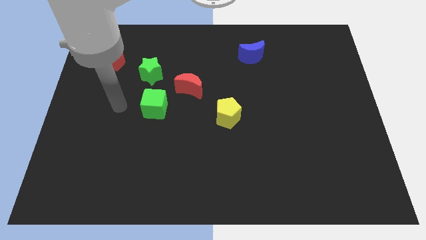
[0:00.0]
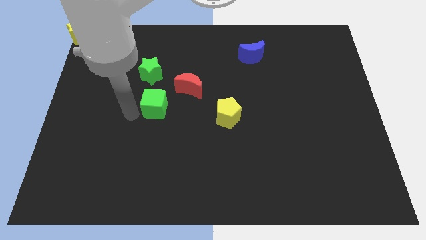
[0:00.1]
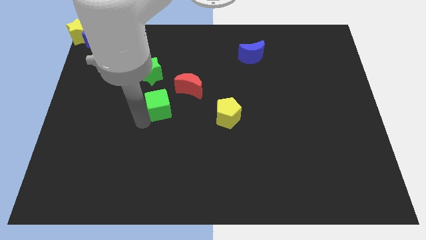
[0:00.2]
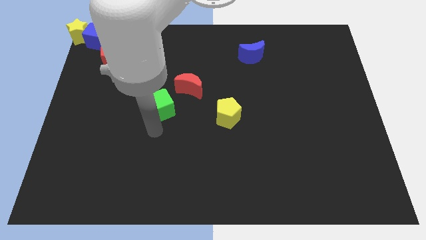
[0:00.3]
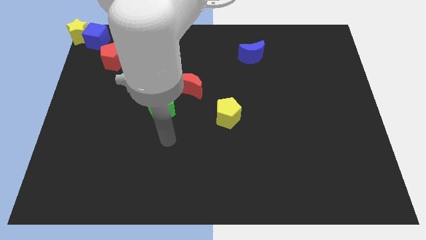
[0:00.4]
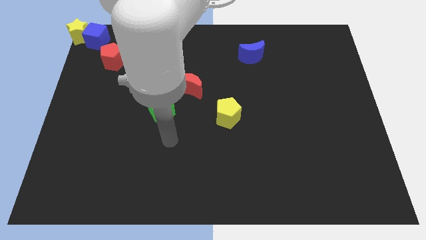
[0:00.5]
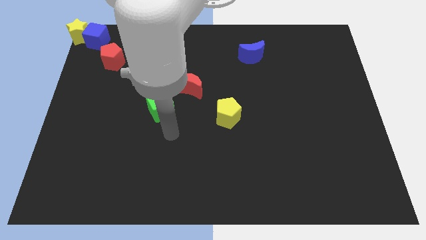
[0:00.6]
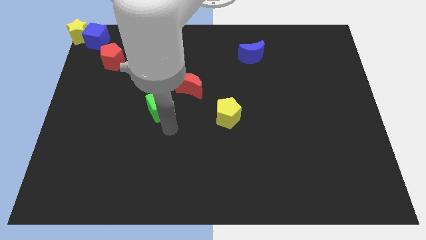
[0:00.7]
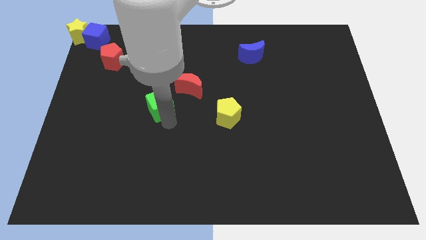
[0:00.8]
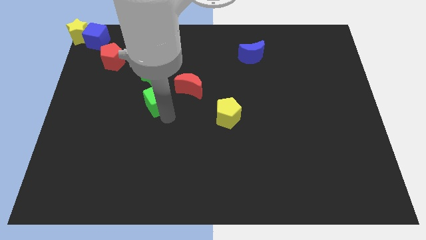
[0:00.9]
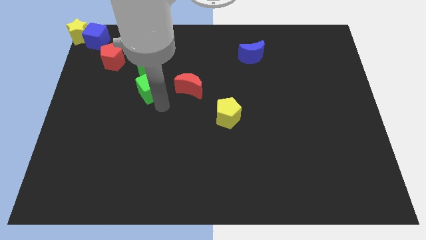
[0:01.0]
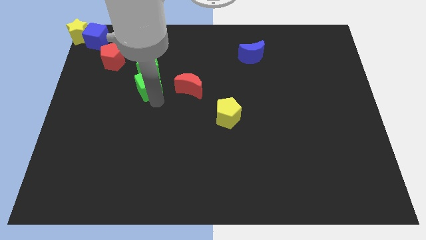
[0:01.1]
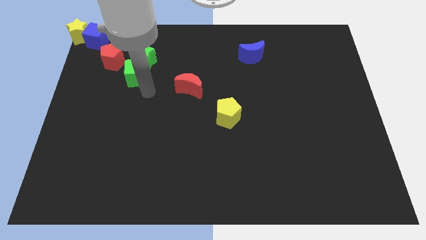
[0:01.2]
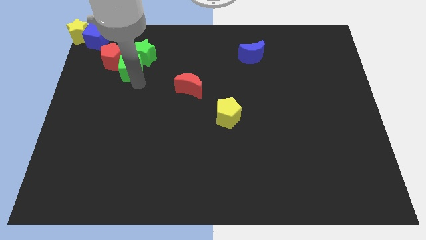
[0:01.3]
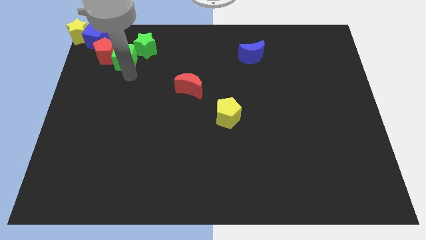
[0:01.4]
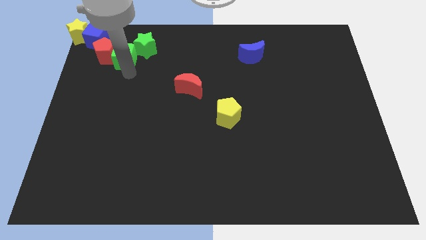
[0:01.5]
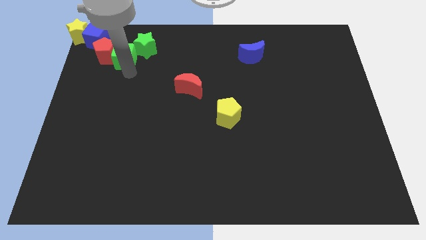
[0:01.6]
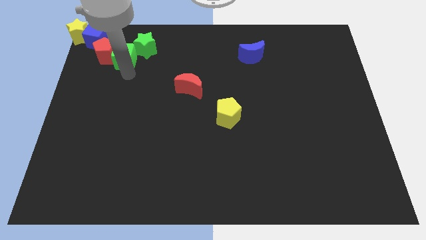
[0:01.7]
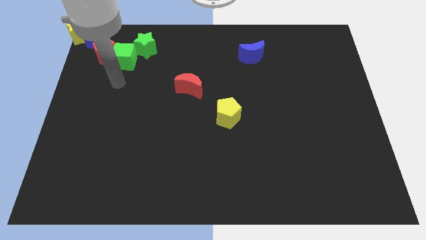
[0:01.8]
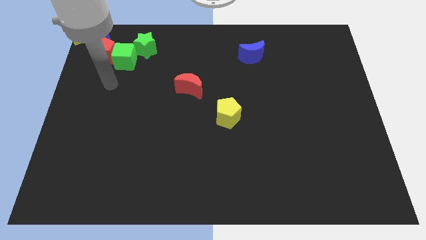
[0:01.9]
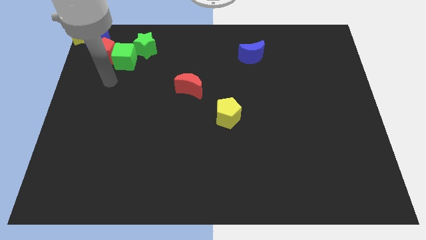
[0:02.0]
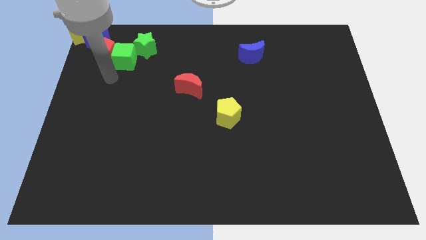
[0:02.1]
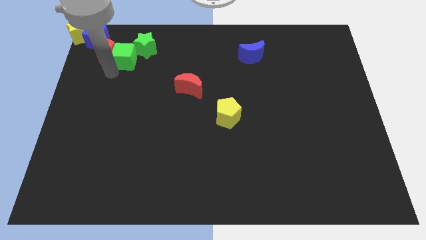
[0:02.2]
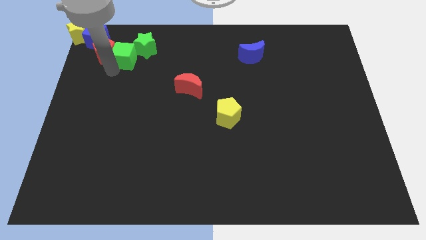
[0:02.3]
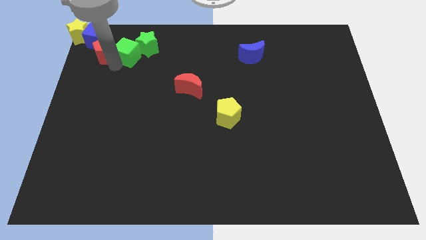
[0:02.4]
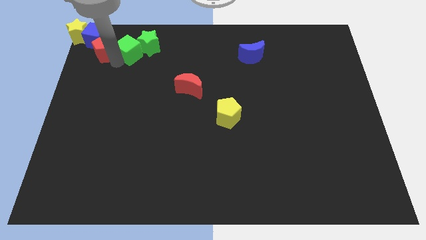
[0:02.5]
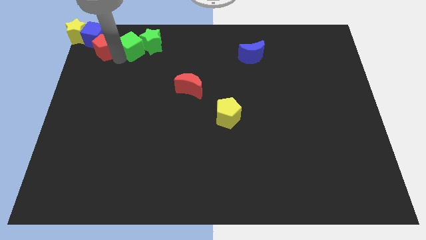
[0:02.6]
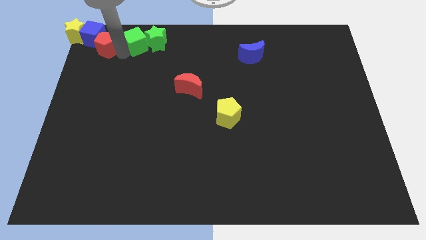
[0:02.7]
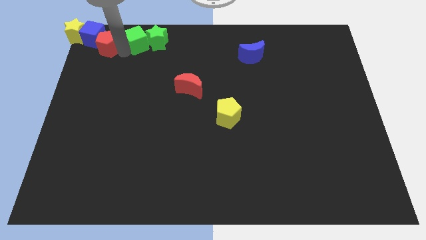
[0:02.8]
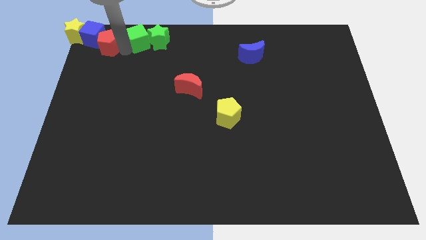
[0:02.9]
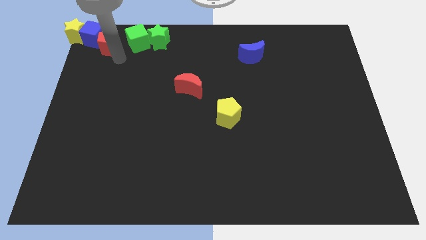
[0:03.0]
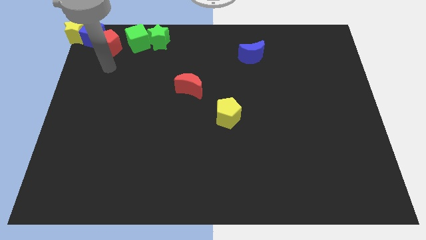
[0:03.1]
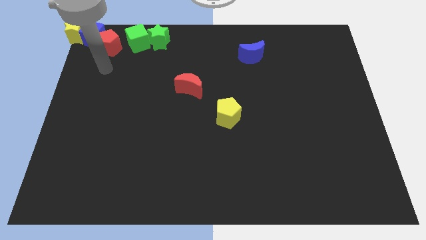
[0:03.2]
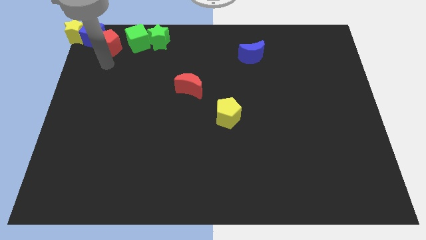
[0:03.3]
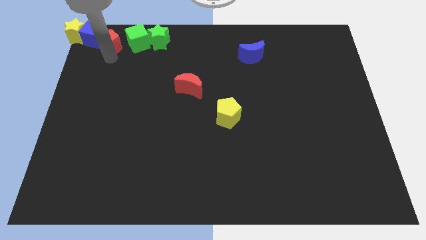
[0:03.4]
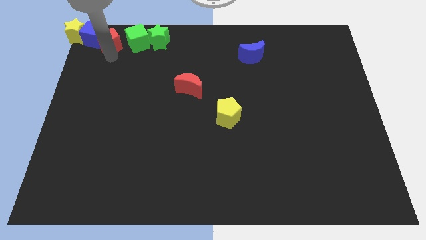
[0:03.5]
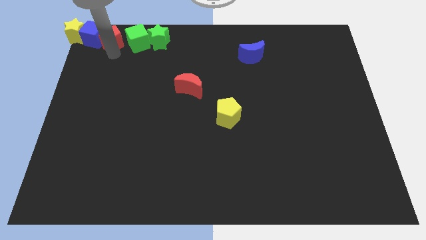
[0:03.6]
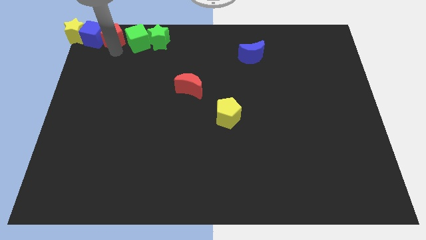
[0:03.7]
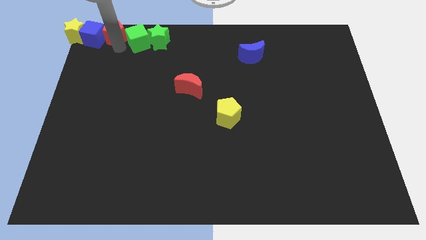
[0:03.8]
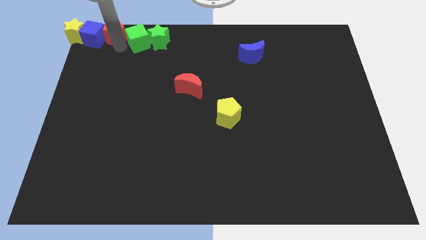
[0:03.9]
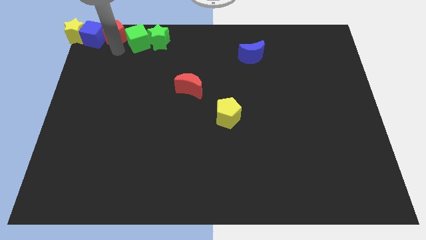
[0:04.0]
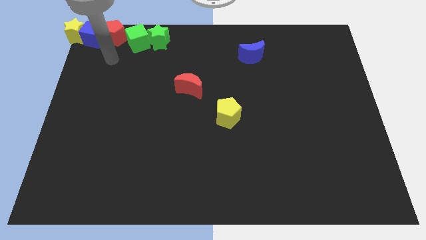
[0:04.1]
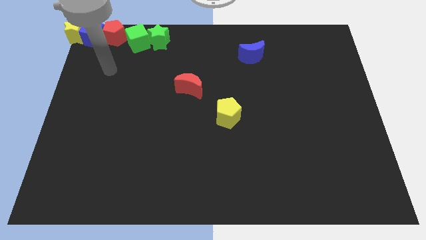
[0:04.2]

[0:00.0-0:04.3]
place green cube to the top of the board

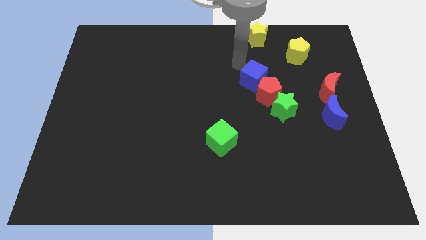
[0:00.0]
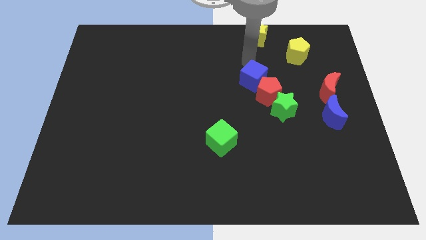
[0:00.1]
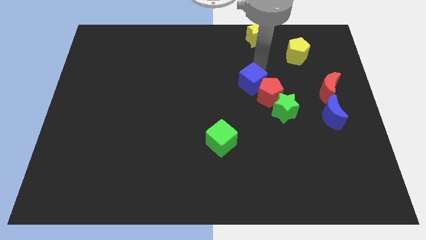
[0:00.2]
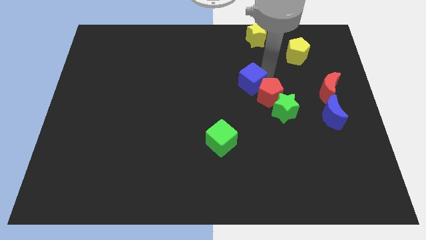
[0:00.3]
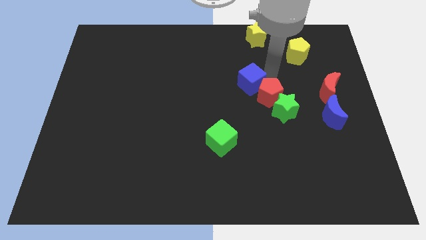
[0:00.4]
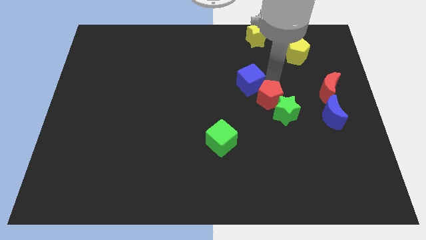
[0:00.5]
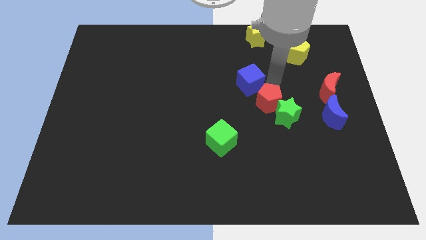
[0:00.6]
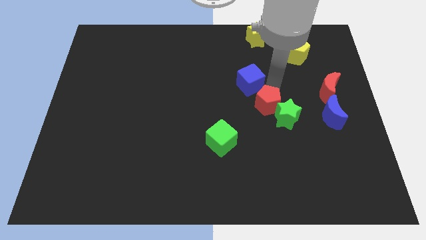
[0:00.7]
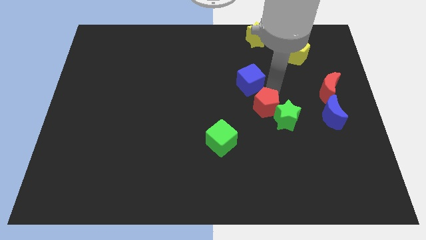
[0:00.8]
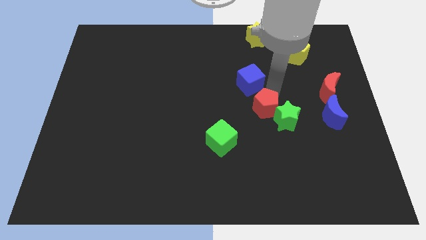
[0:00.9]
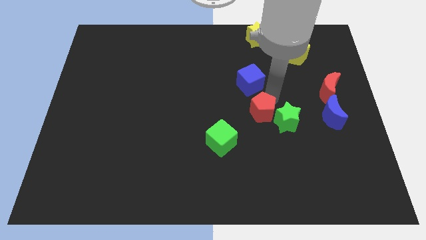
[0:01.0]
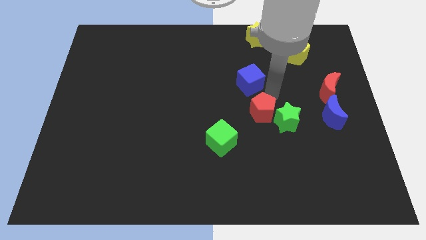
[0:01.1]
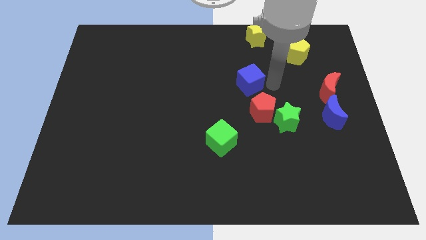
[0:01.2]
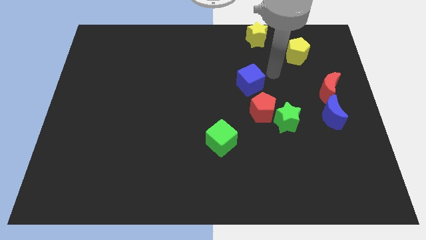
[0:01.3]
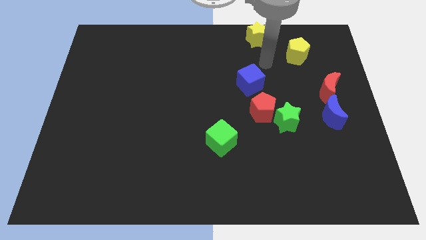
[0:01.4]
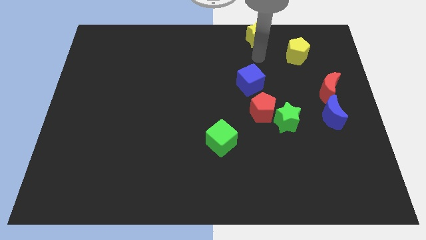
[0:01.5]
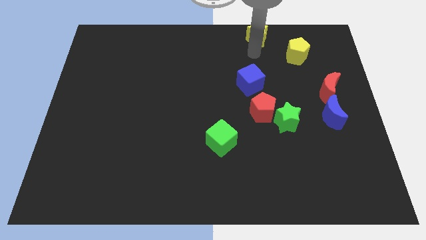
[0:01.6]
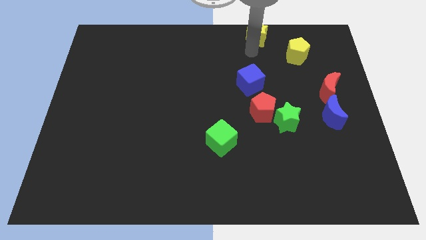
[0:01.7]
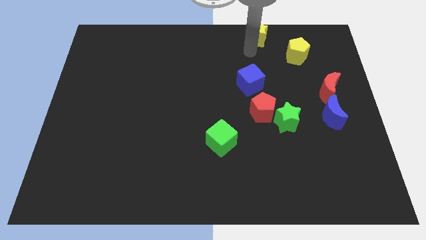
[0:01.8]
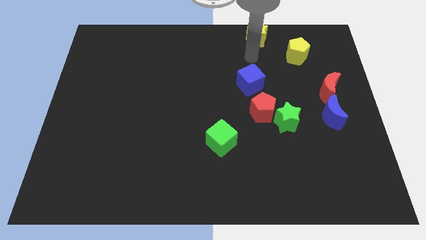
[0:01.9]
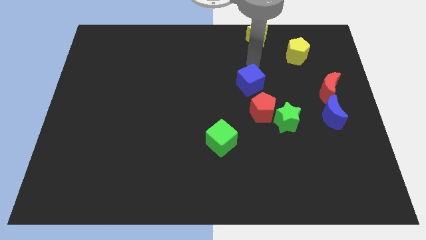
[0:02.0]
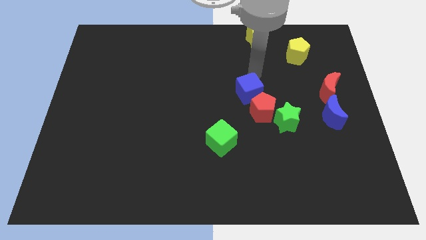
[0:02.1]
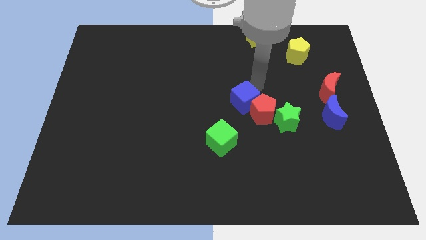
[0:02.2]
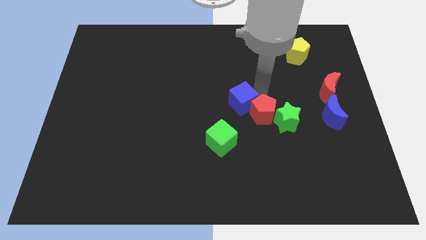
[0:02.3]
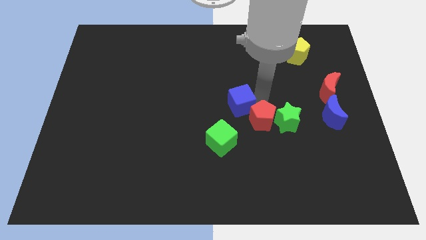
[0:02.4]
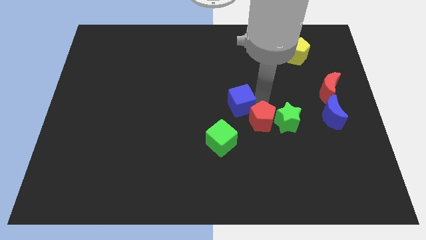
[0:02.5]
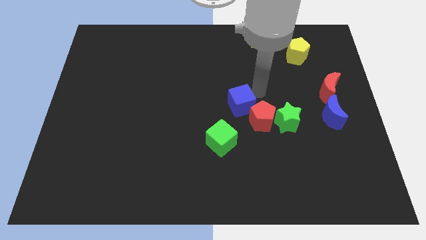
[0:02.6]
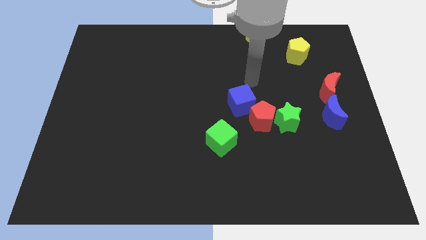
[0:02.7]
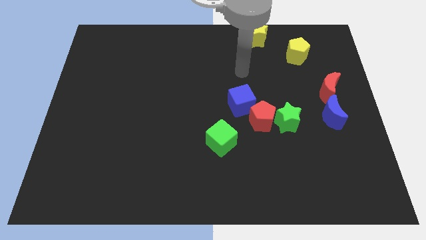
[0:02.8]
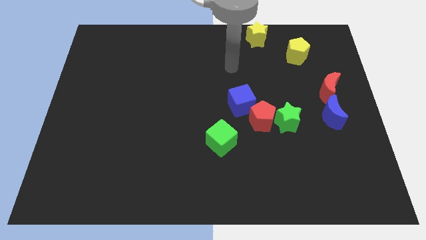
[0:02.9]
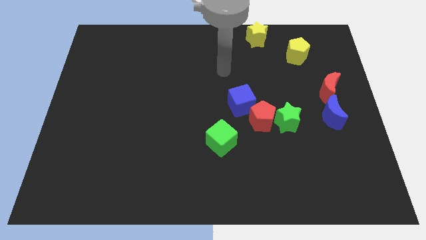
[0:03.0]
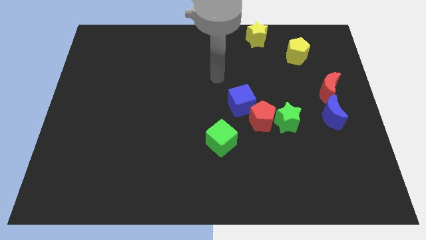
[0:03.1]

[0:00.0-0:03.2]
slightly push the red pentagona and blue cube to bottom center

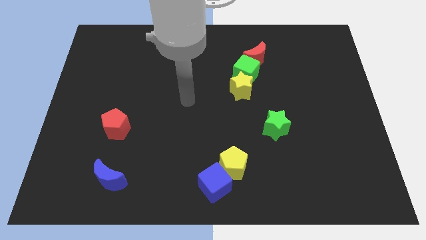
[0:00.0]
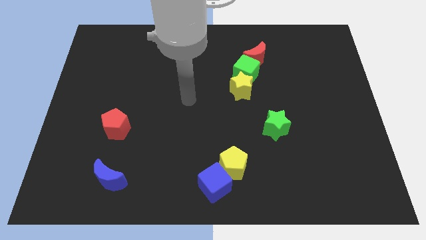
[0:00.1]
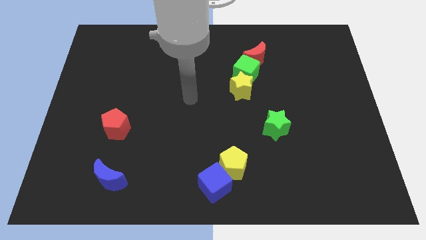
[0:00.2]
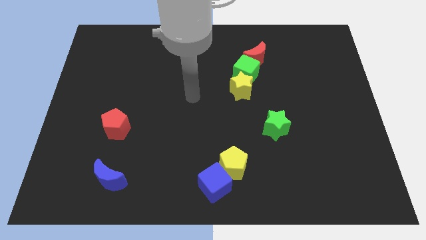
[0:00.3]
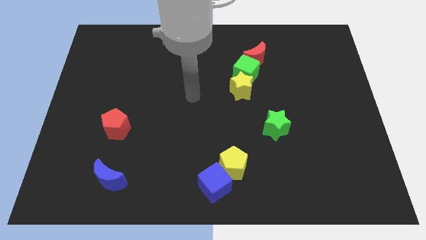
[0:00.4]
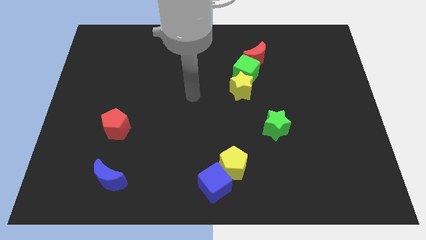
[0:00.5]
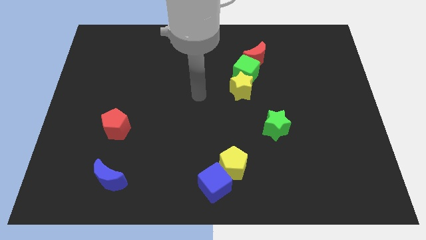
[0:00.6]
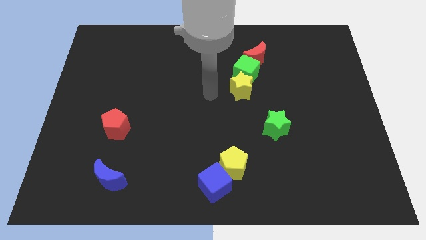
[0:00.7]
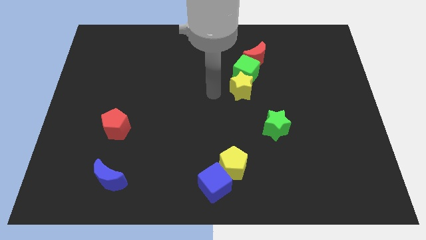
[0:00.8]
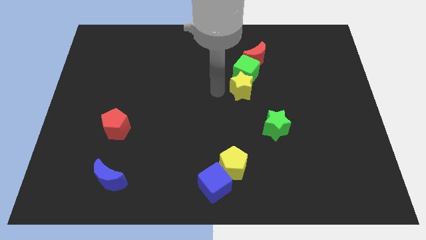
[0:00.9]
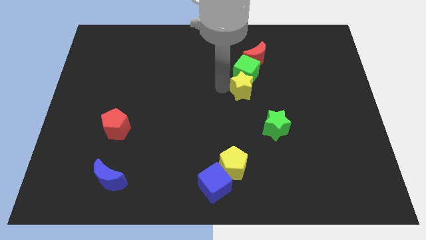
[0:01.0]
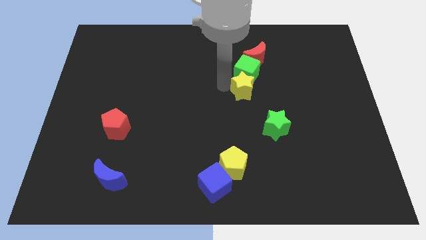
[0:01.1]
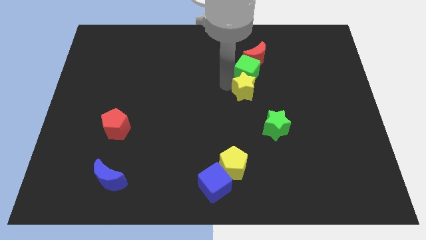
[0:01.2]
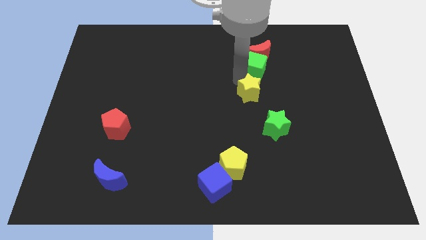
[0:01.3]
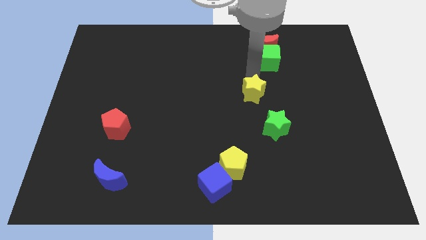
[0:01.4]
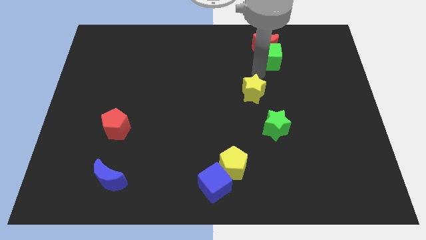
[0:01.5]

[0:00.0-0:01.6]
separate the yellow star and green cube
